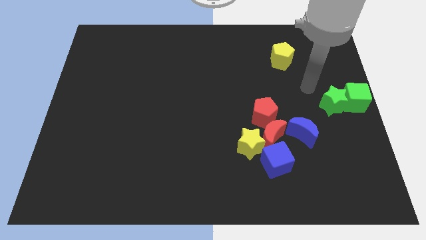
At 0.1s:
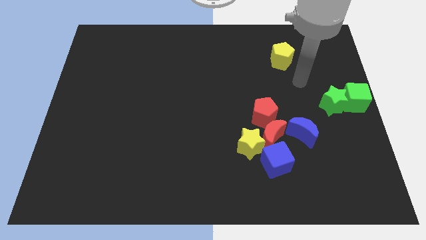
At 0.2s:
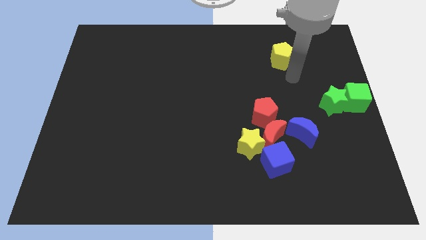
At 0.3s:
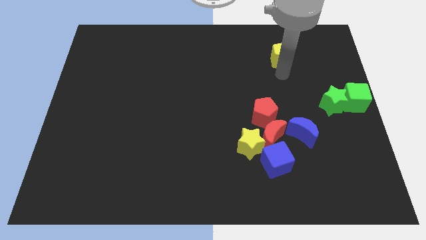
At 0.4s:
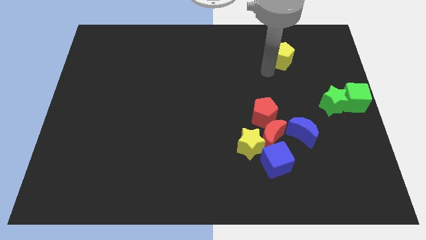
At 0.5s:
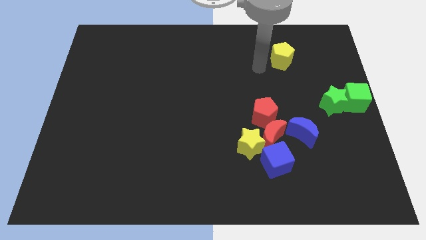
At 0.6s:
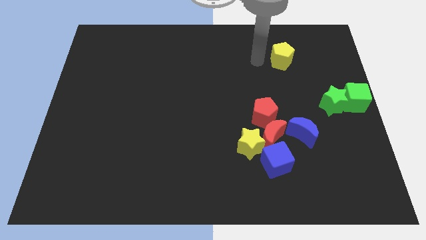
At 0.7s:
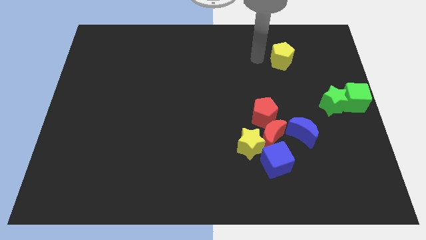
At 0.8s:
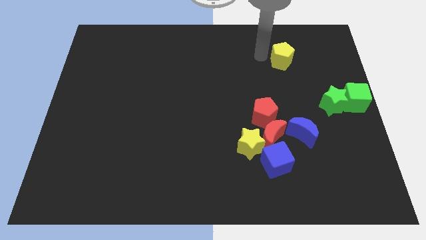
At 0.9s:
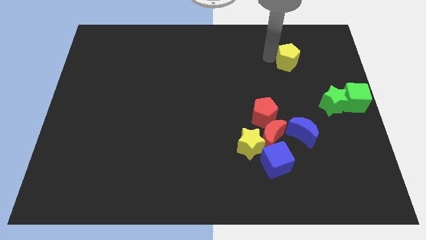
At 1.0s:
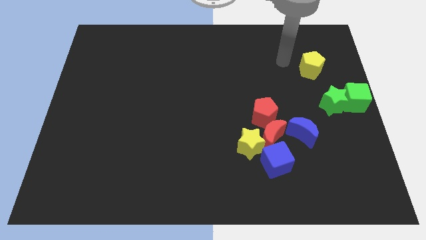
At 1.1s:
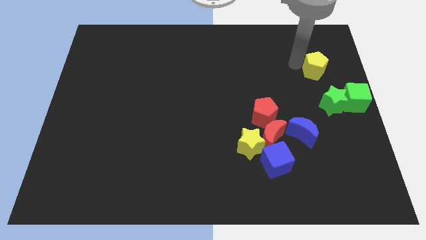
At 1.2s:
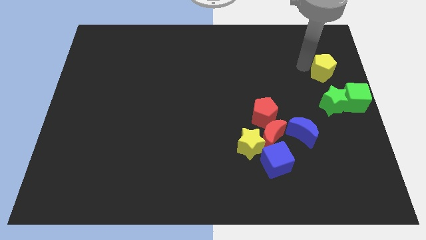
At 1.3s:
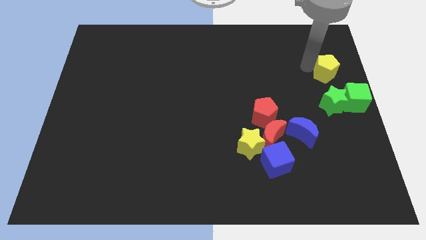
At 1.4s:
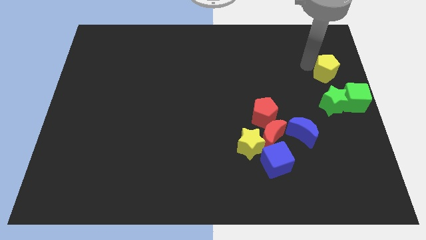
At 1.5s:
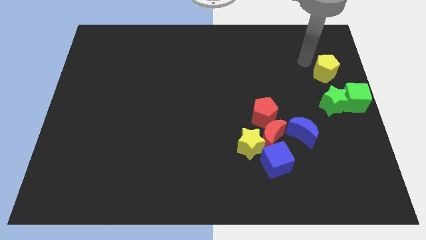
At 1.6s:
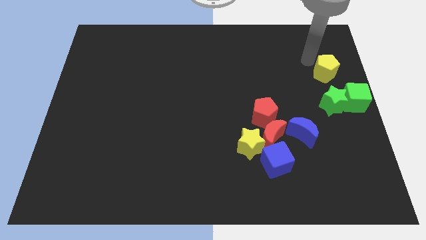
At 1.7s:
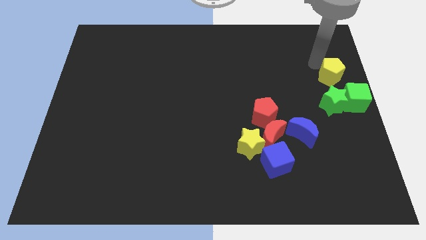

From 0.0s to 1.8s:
move the yellow pentagon to the top side of the green star

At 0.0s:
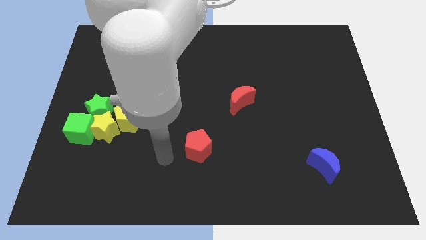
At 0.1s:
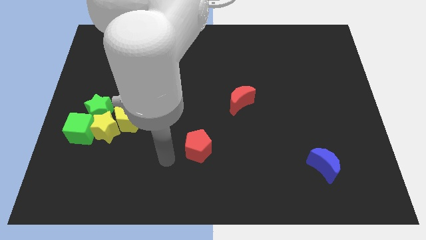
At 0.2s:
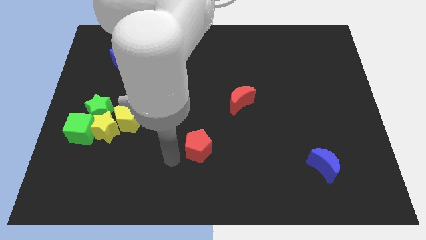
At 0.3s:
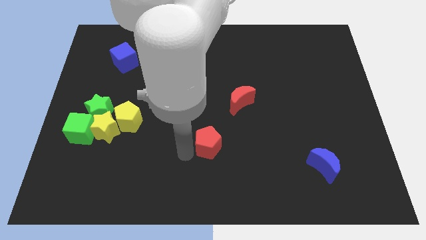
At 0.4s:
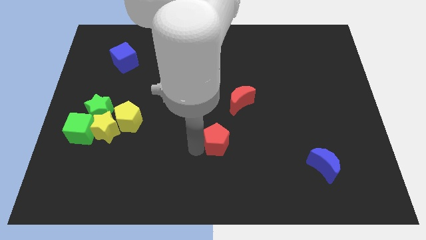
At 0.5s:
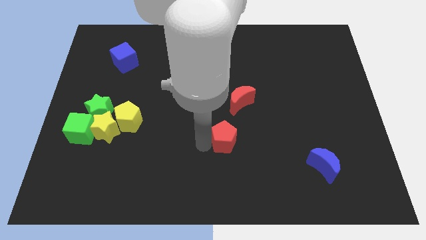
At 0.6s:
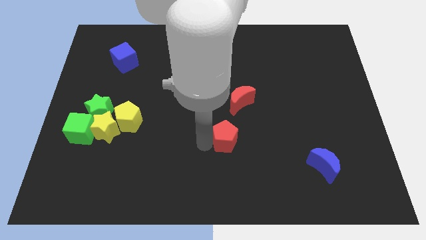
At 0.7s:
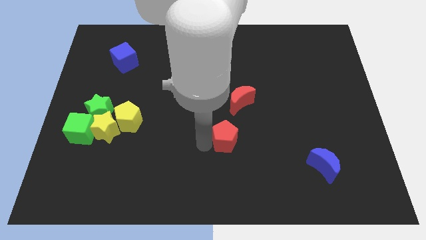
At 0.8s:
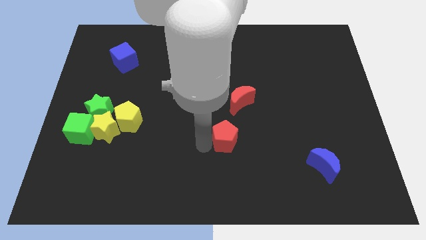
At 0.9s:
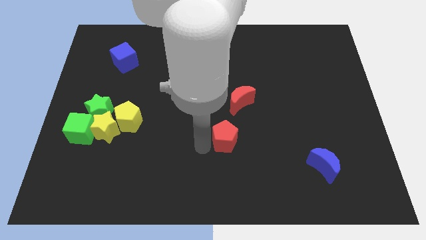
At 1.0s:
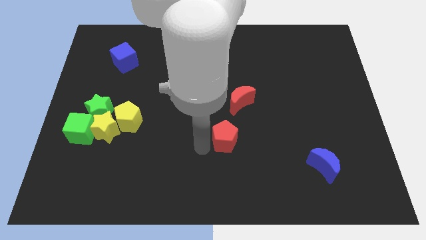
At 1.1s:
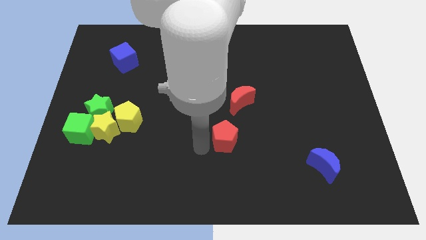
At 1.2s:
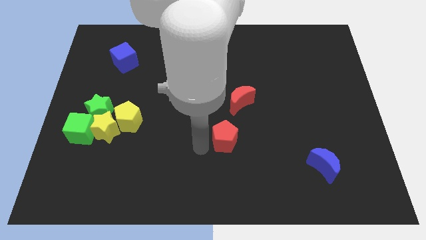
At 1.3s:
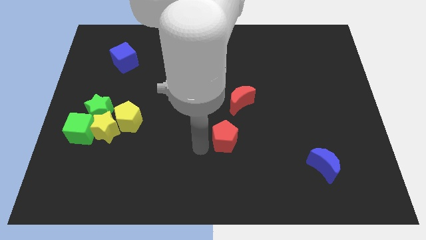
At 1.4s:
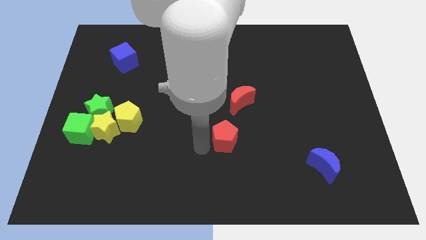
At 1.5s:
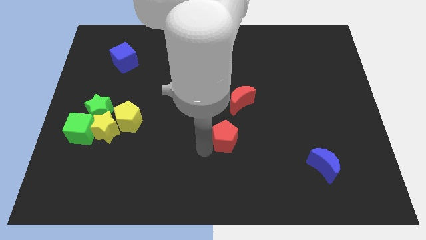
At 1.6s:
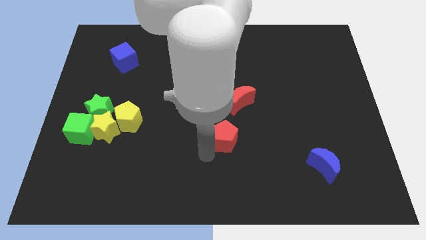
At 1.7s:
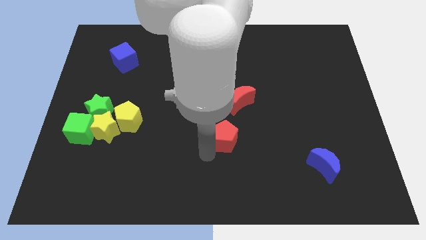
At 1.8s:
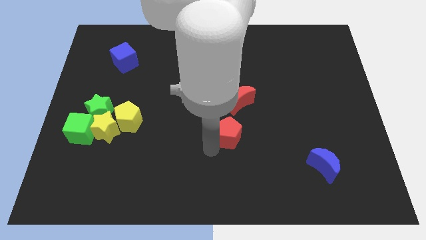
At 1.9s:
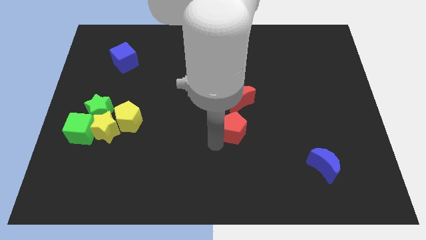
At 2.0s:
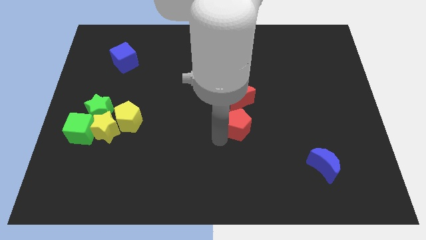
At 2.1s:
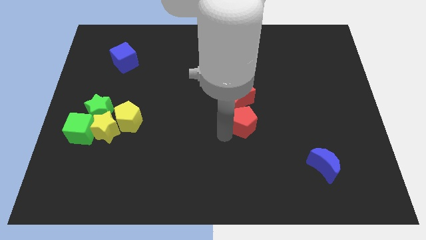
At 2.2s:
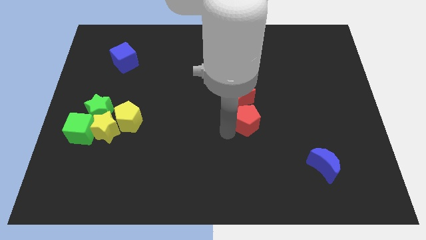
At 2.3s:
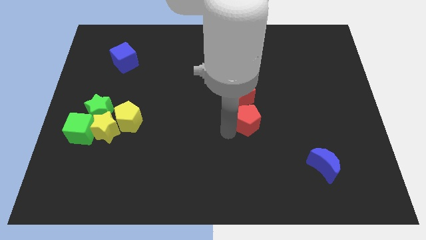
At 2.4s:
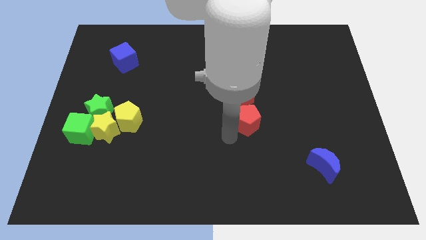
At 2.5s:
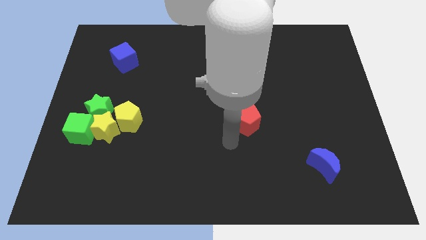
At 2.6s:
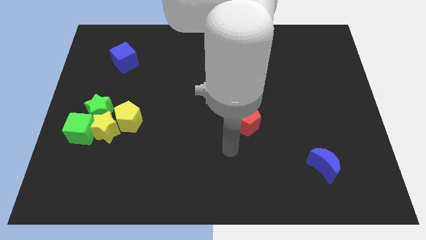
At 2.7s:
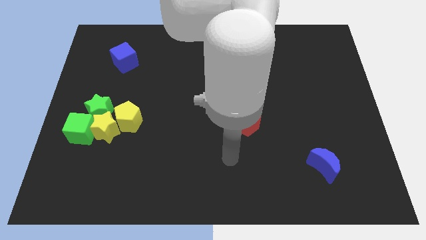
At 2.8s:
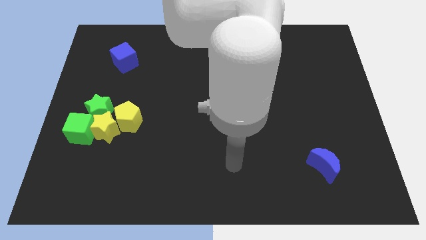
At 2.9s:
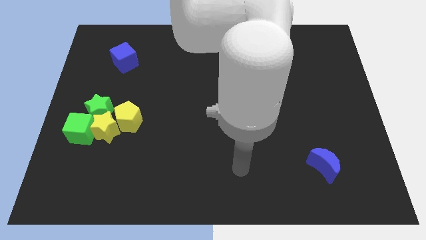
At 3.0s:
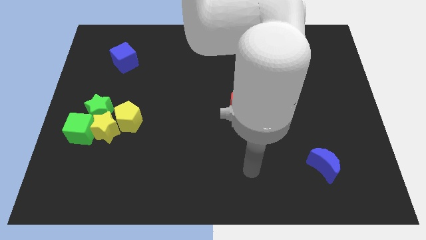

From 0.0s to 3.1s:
push the red pentagon below the red moon

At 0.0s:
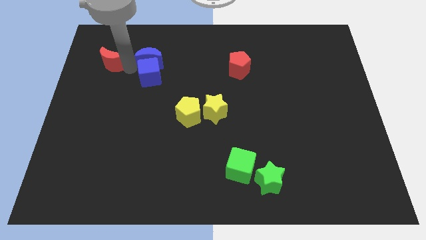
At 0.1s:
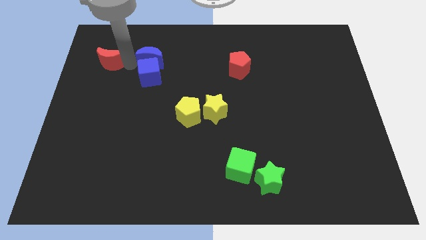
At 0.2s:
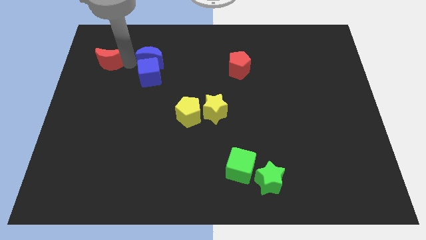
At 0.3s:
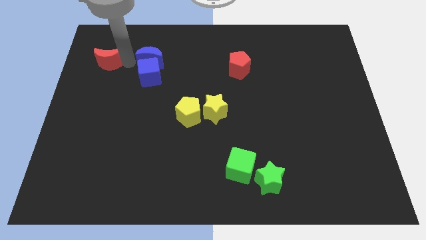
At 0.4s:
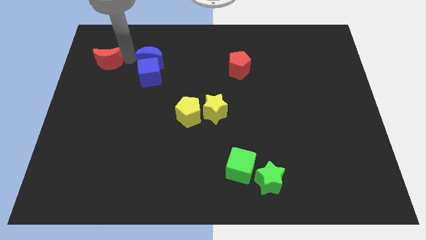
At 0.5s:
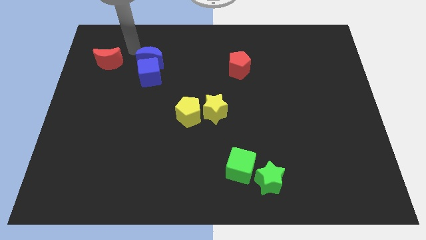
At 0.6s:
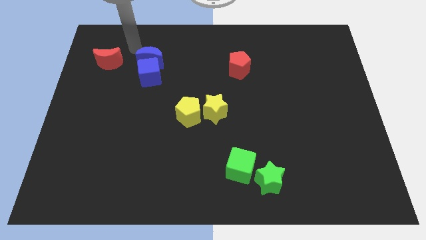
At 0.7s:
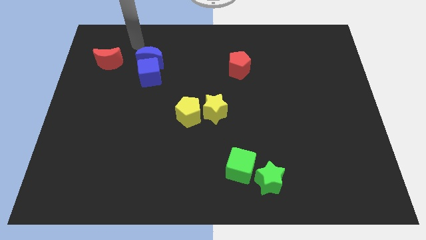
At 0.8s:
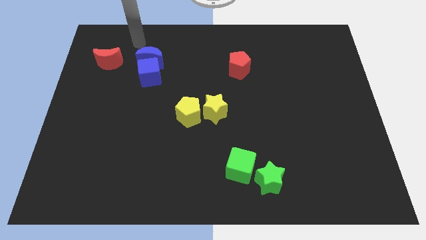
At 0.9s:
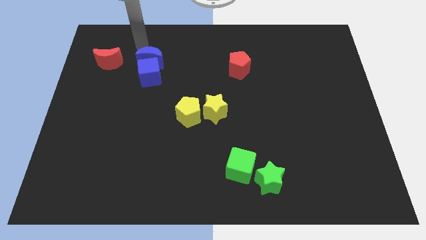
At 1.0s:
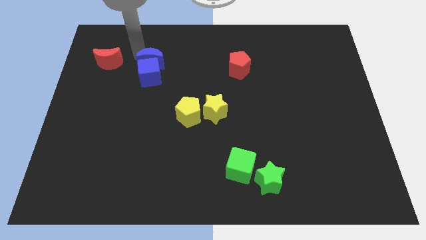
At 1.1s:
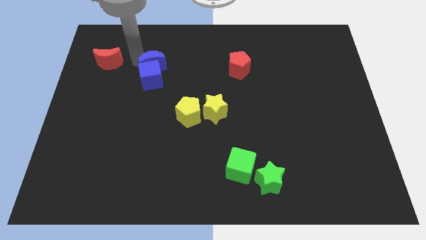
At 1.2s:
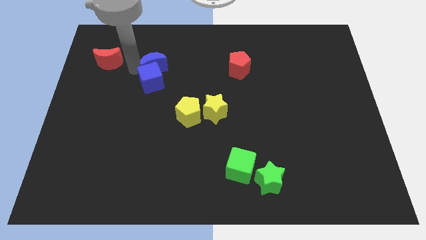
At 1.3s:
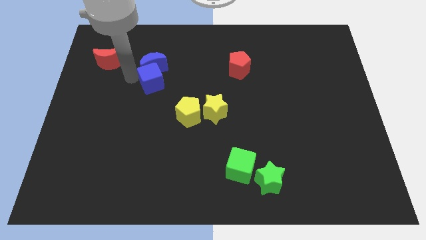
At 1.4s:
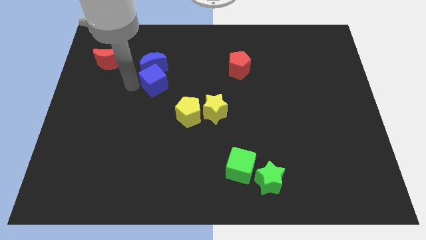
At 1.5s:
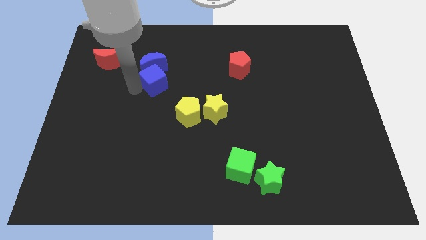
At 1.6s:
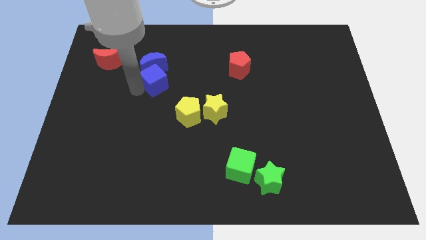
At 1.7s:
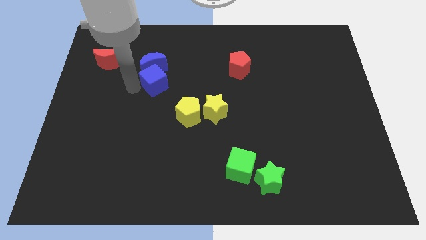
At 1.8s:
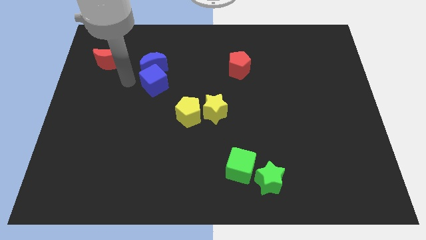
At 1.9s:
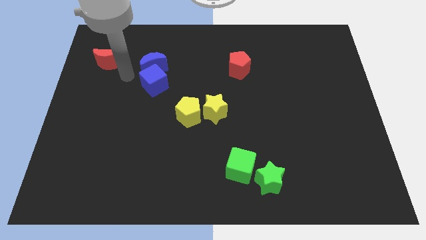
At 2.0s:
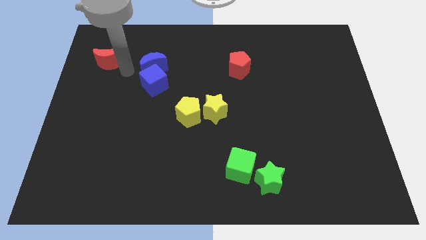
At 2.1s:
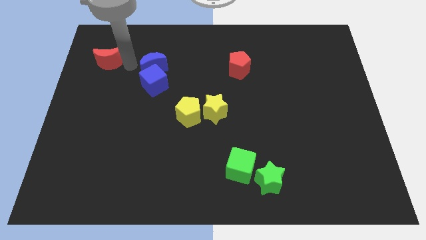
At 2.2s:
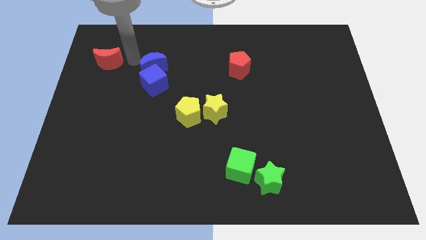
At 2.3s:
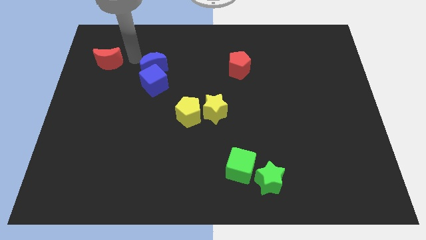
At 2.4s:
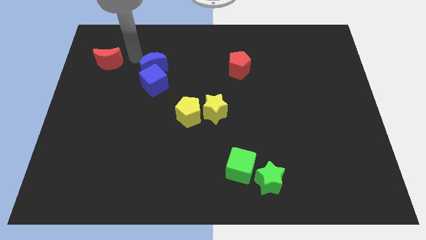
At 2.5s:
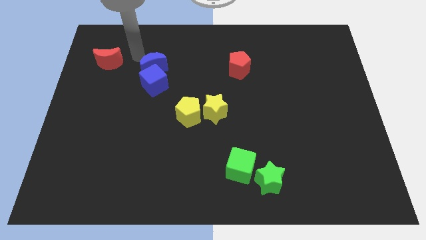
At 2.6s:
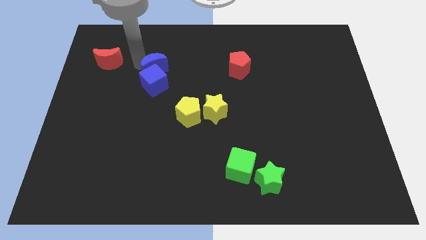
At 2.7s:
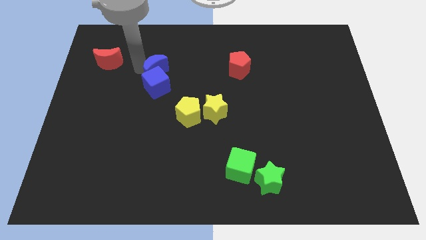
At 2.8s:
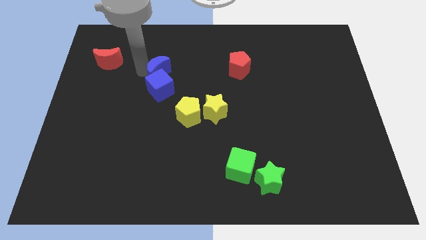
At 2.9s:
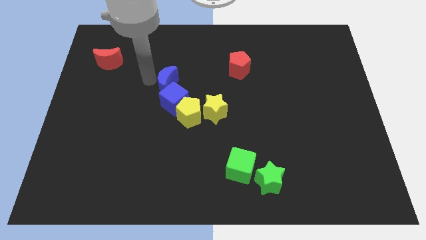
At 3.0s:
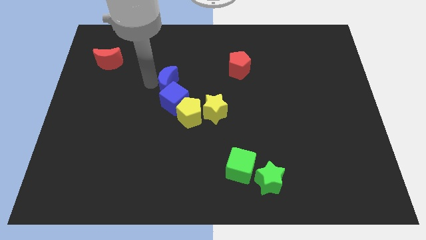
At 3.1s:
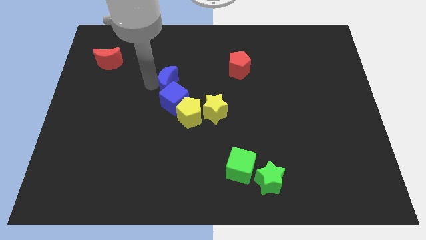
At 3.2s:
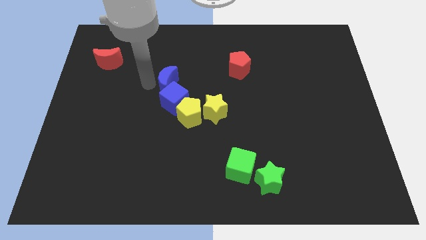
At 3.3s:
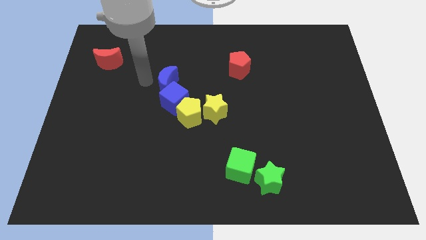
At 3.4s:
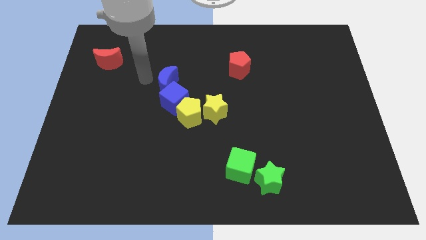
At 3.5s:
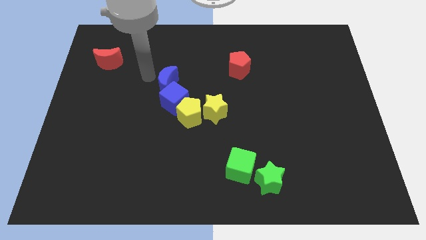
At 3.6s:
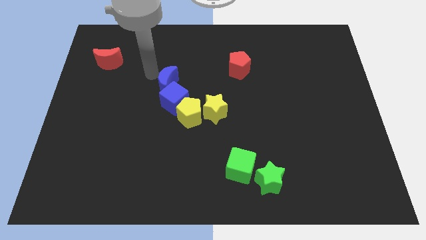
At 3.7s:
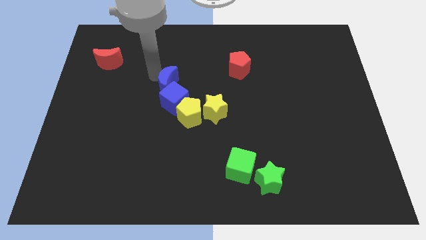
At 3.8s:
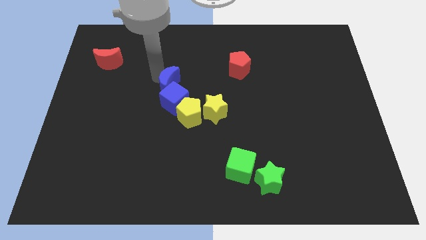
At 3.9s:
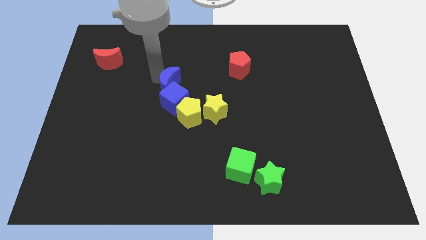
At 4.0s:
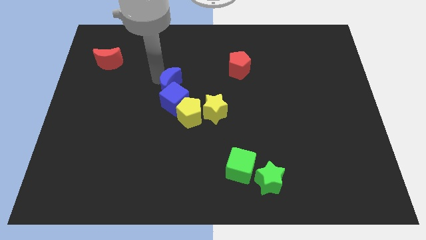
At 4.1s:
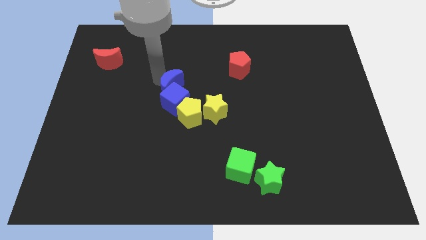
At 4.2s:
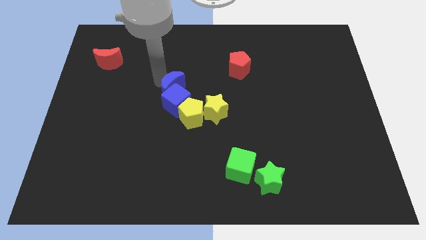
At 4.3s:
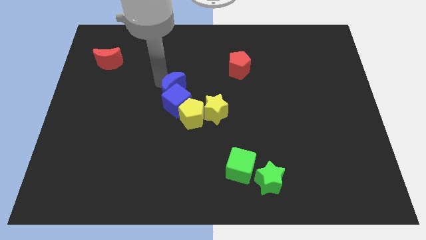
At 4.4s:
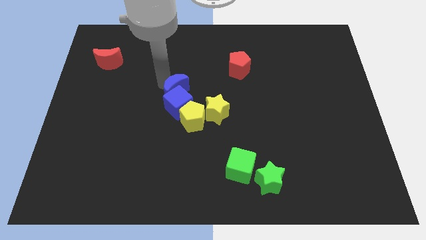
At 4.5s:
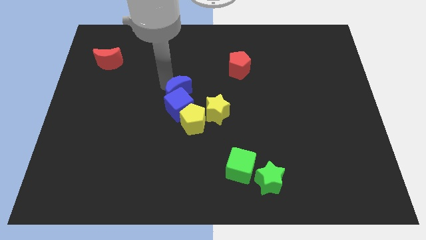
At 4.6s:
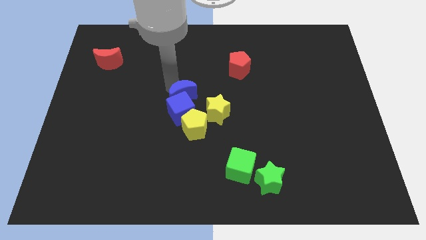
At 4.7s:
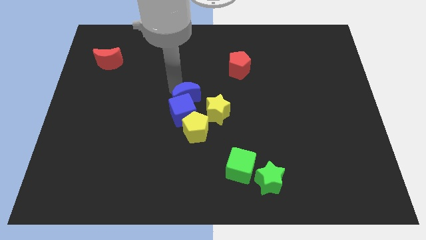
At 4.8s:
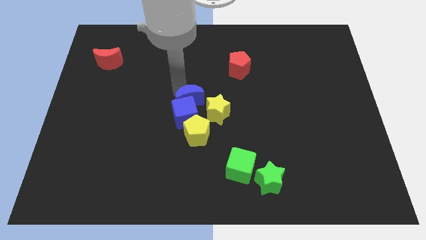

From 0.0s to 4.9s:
place the blue blocks into the center
